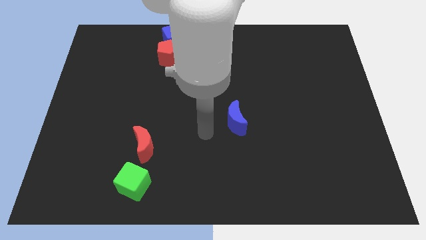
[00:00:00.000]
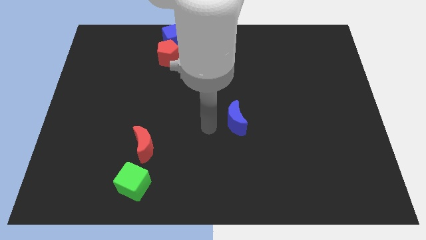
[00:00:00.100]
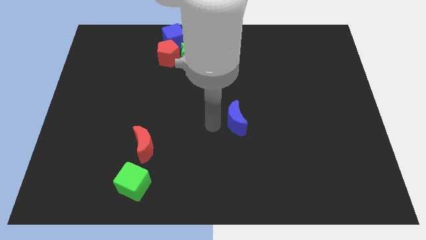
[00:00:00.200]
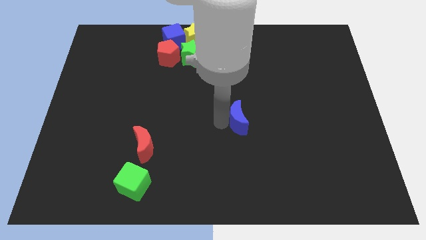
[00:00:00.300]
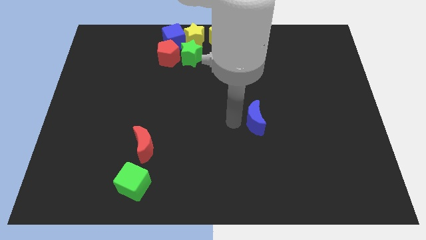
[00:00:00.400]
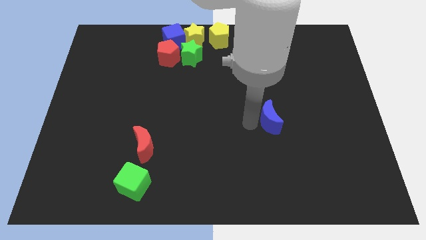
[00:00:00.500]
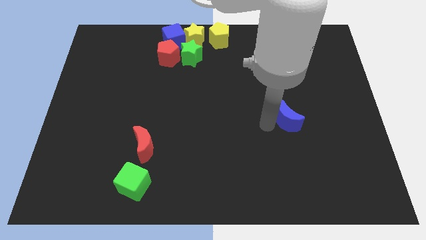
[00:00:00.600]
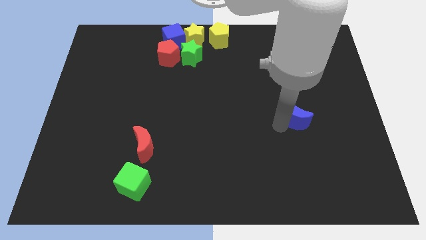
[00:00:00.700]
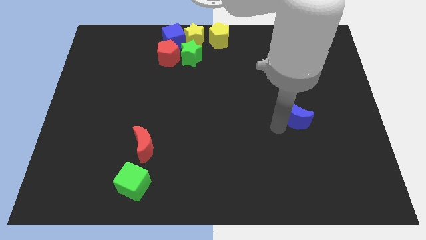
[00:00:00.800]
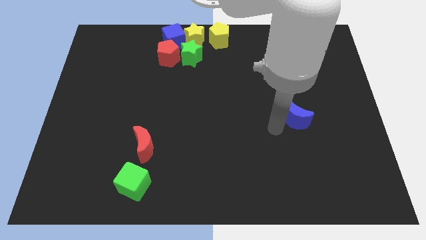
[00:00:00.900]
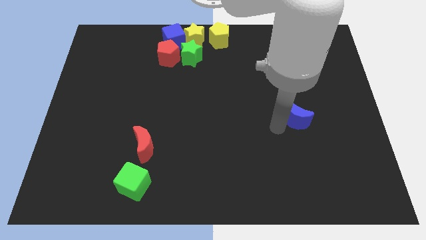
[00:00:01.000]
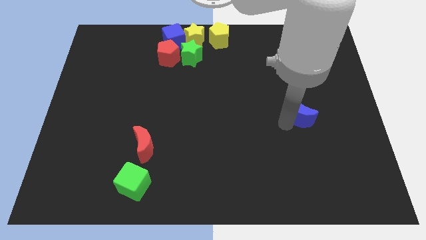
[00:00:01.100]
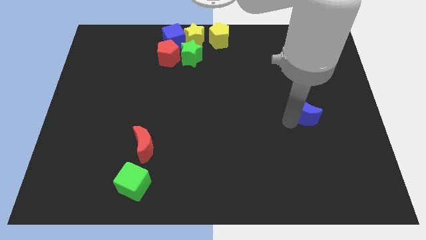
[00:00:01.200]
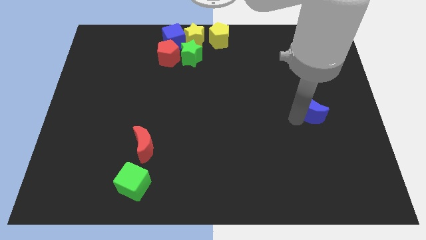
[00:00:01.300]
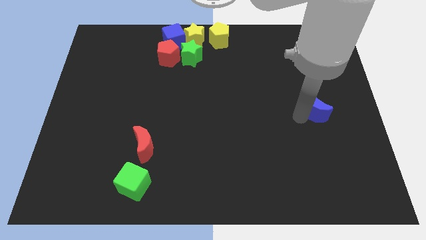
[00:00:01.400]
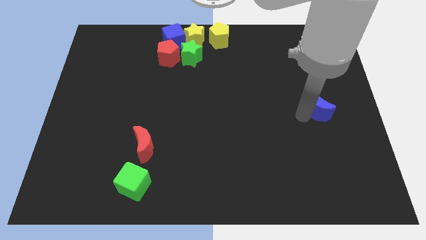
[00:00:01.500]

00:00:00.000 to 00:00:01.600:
slide the blue moon towards the right center

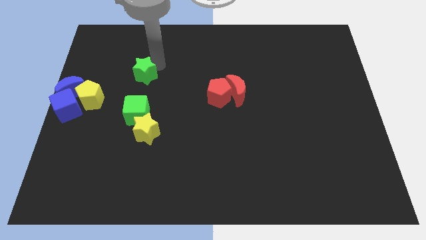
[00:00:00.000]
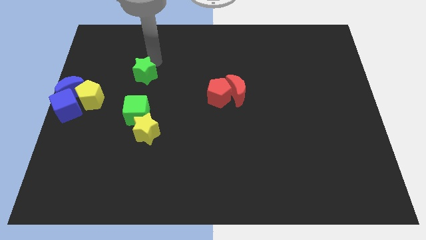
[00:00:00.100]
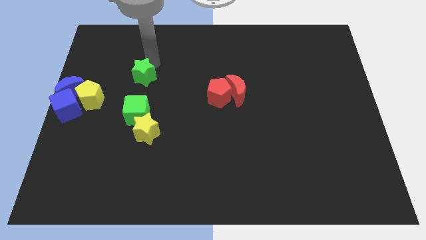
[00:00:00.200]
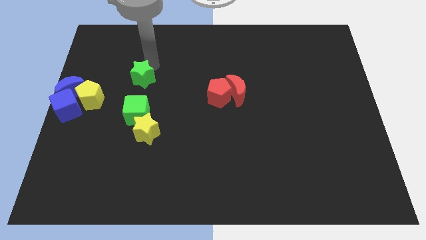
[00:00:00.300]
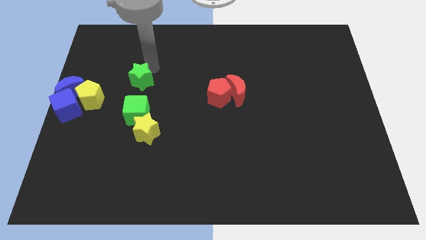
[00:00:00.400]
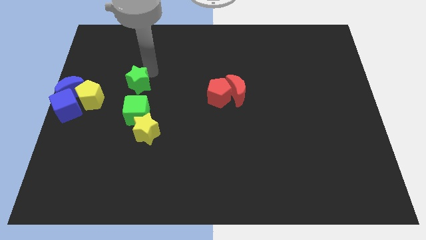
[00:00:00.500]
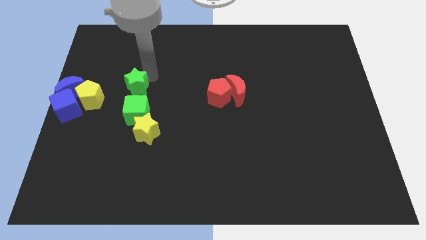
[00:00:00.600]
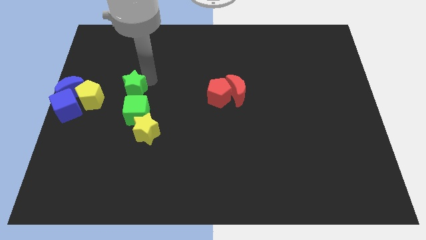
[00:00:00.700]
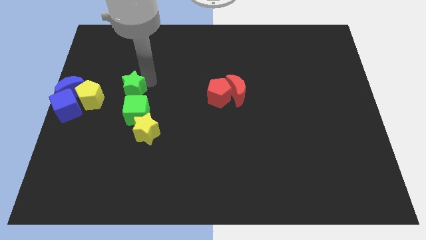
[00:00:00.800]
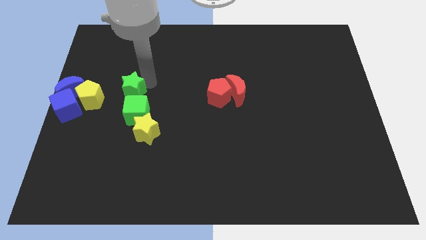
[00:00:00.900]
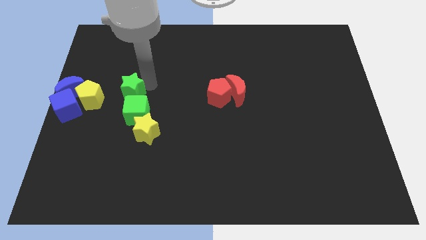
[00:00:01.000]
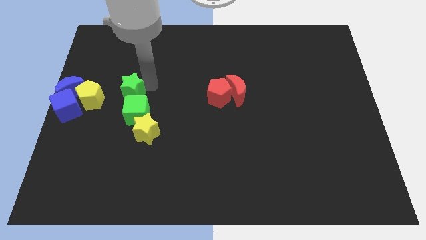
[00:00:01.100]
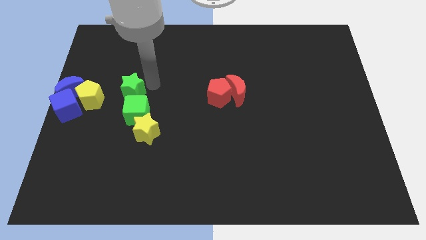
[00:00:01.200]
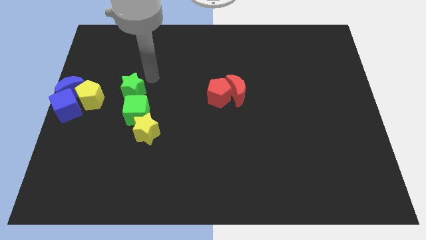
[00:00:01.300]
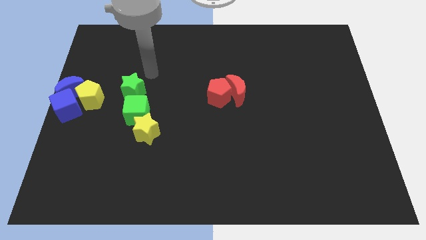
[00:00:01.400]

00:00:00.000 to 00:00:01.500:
move the green star above the green cube

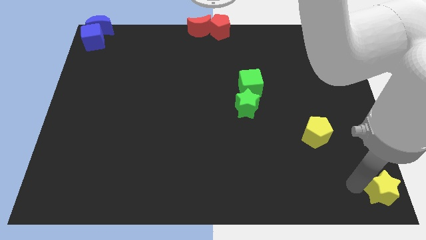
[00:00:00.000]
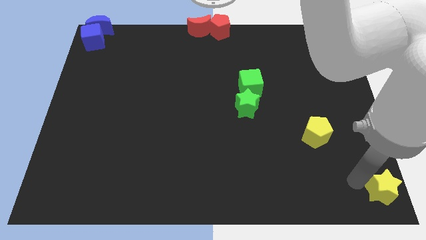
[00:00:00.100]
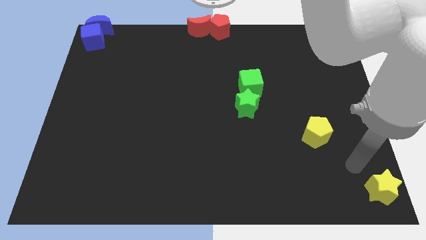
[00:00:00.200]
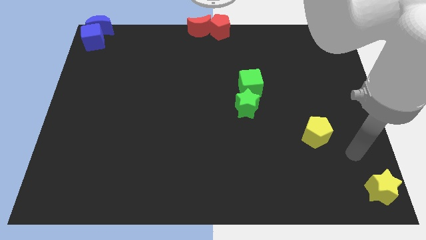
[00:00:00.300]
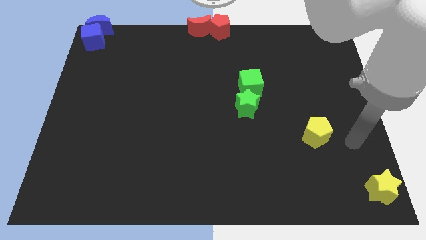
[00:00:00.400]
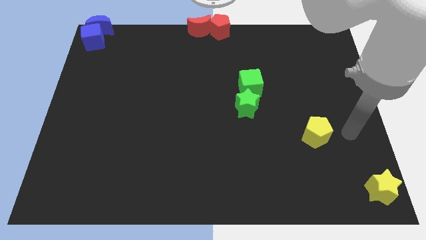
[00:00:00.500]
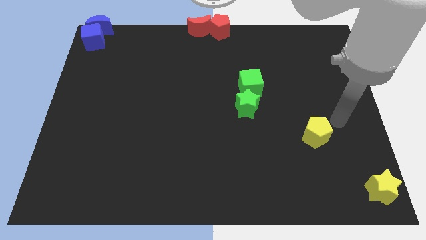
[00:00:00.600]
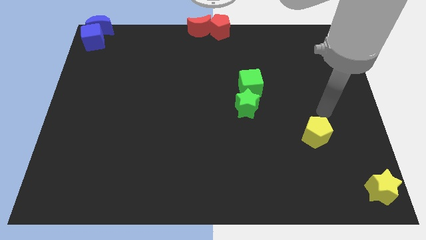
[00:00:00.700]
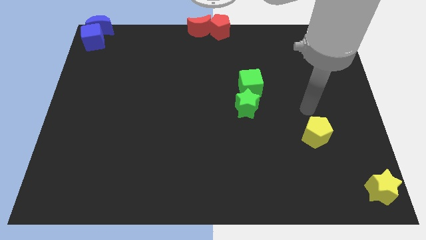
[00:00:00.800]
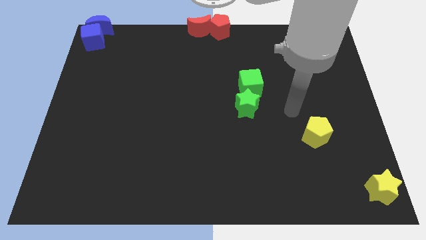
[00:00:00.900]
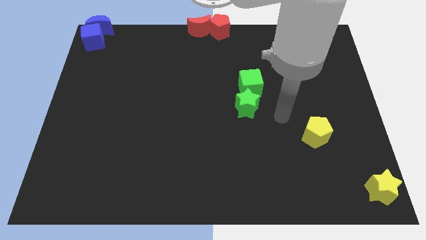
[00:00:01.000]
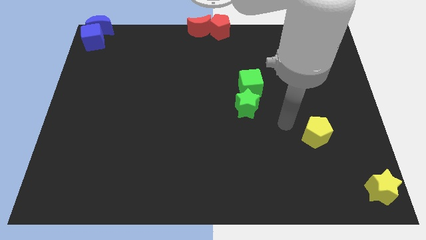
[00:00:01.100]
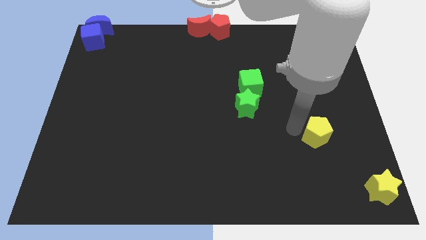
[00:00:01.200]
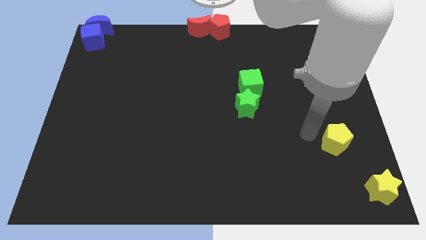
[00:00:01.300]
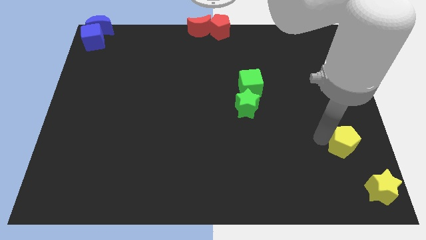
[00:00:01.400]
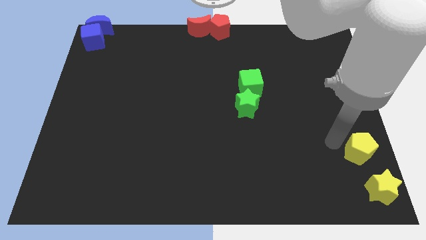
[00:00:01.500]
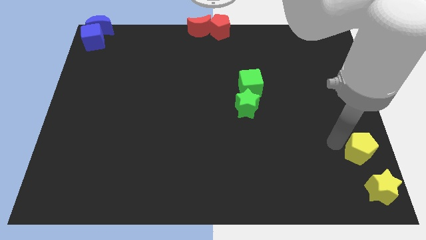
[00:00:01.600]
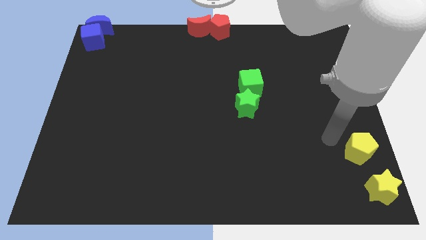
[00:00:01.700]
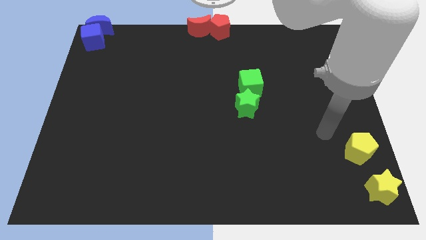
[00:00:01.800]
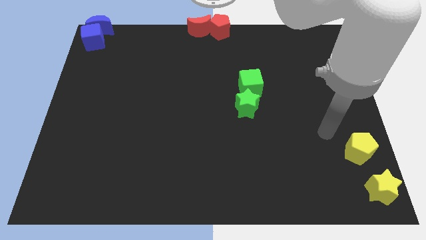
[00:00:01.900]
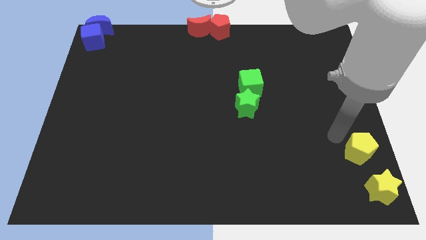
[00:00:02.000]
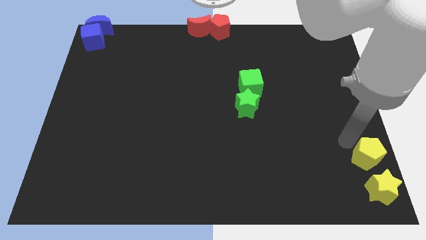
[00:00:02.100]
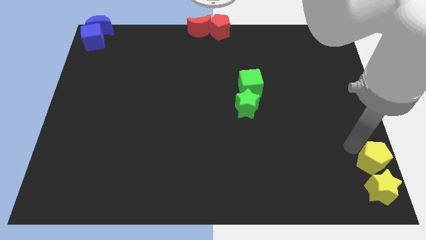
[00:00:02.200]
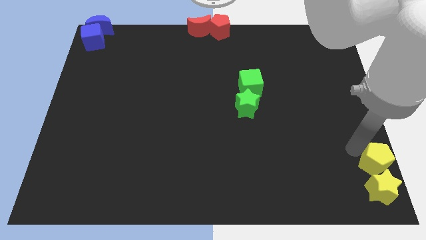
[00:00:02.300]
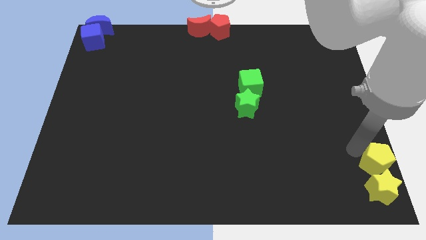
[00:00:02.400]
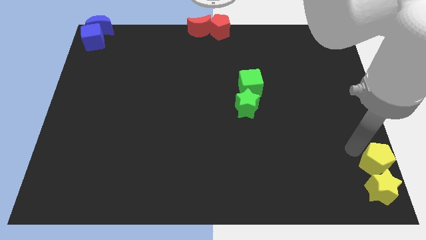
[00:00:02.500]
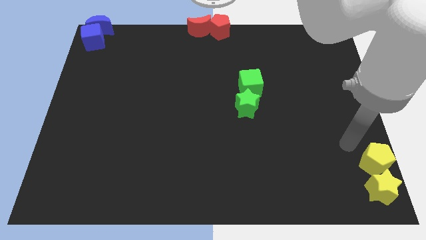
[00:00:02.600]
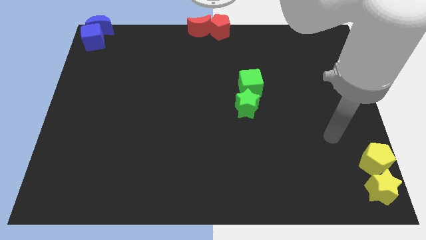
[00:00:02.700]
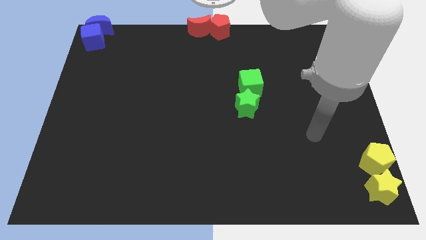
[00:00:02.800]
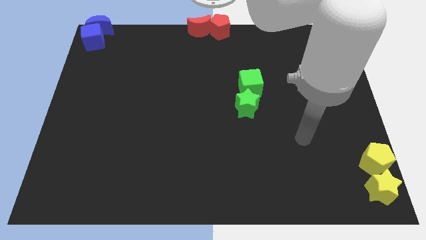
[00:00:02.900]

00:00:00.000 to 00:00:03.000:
move yellow pentagon above yellow star

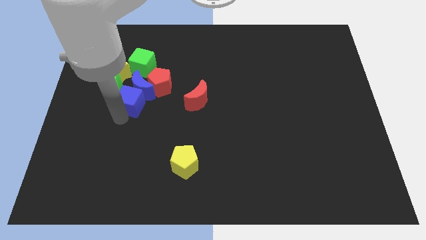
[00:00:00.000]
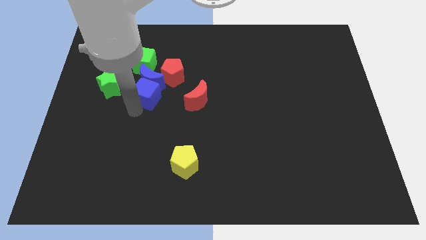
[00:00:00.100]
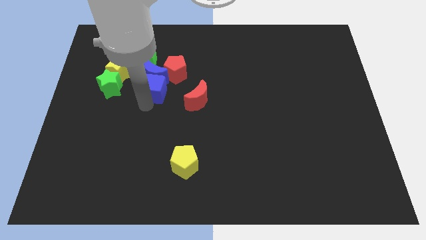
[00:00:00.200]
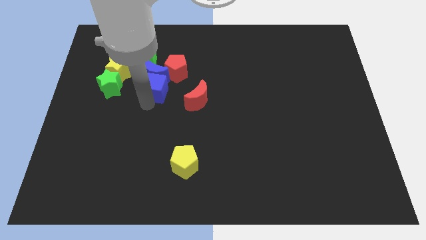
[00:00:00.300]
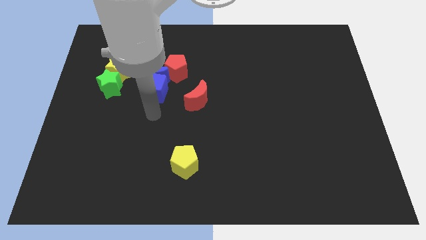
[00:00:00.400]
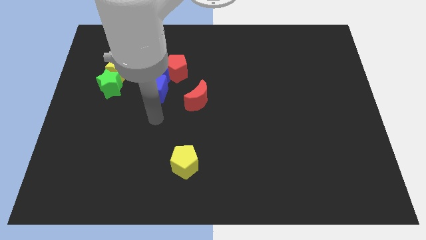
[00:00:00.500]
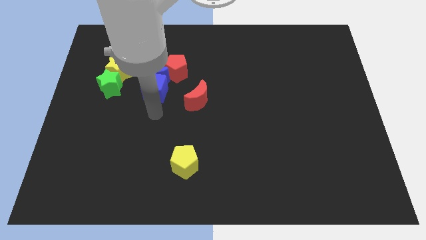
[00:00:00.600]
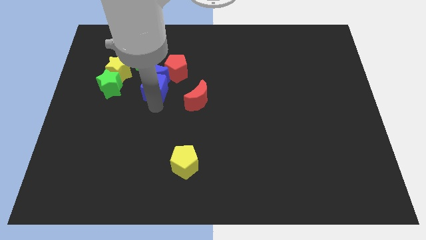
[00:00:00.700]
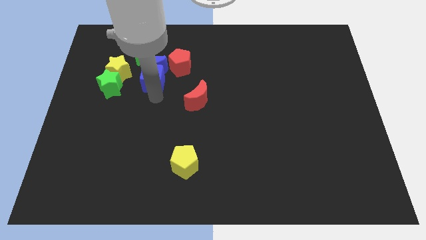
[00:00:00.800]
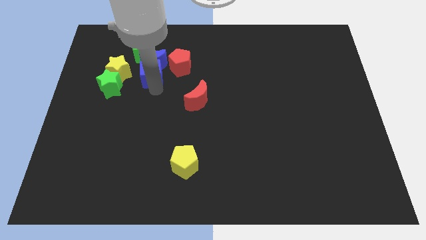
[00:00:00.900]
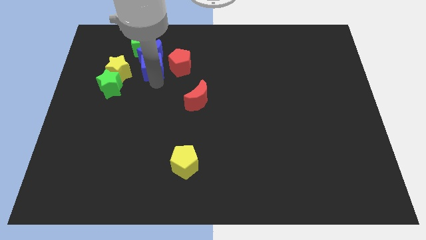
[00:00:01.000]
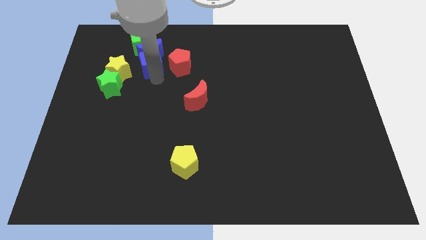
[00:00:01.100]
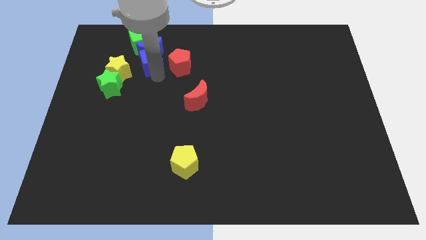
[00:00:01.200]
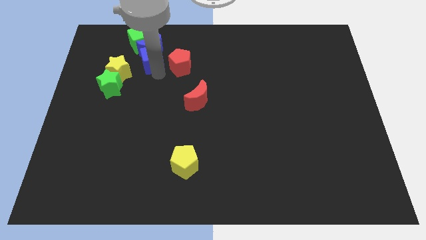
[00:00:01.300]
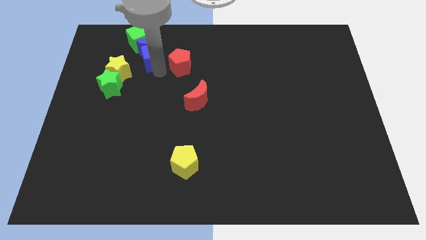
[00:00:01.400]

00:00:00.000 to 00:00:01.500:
place blue cube to the left of red pentagon

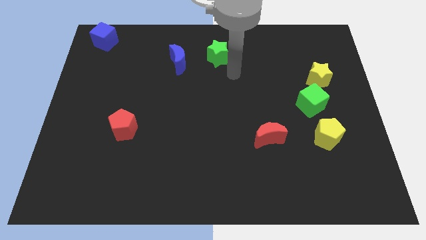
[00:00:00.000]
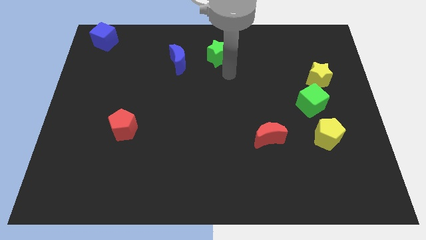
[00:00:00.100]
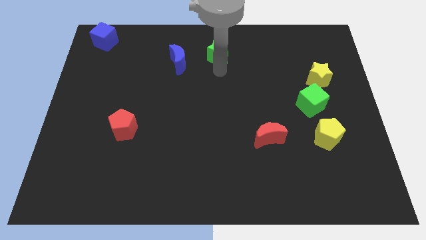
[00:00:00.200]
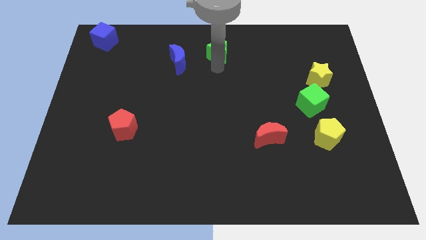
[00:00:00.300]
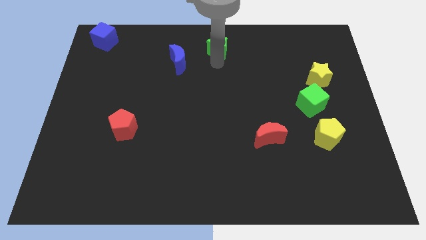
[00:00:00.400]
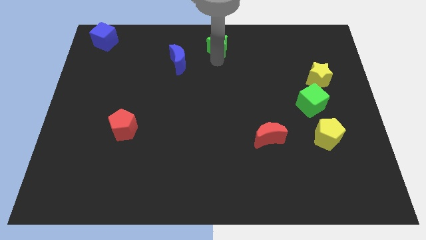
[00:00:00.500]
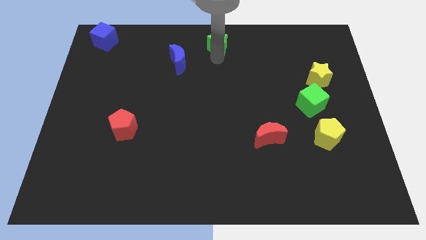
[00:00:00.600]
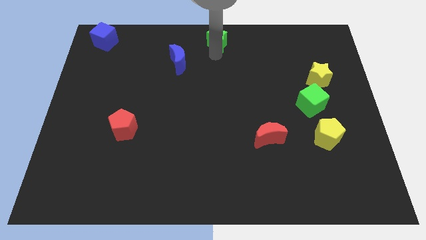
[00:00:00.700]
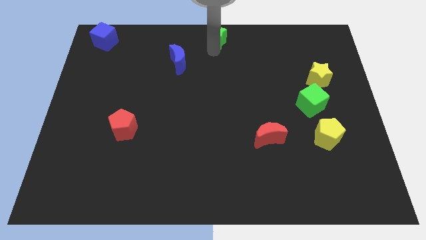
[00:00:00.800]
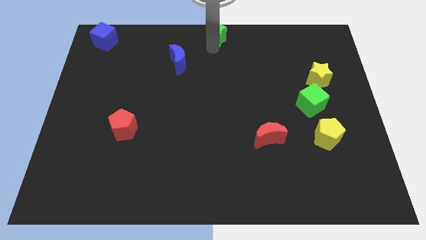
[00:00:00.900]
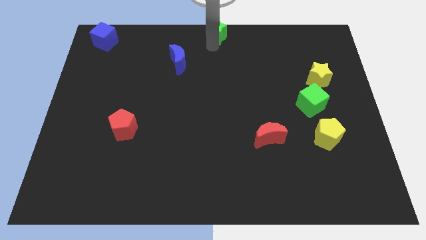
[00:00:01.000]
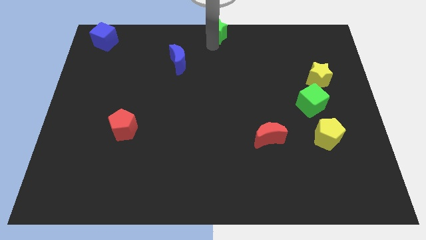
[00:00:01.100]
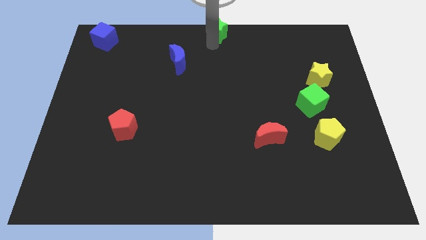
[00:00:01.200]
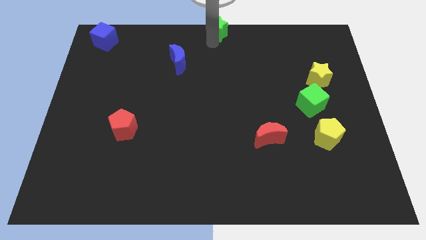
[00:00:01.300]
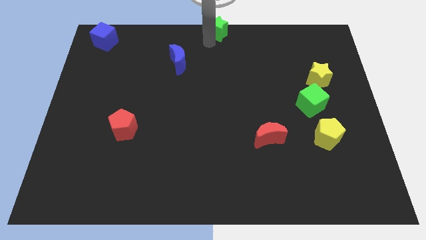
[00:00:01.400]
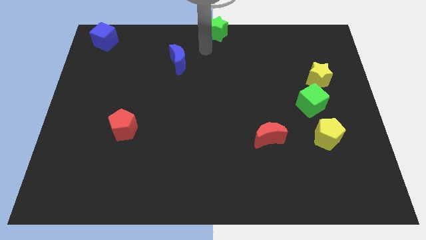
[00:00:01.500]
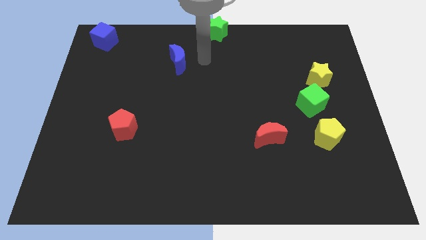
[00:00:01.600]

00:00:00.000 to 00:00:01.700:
push the green star to the top center
